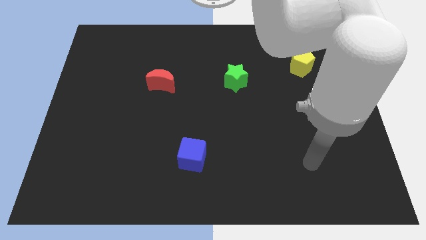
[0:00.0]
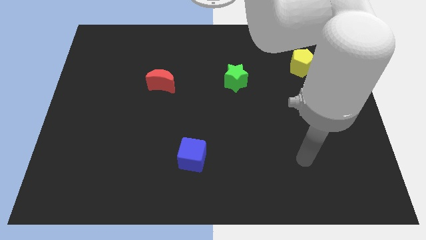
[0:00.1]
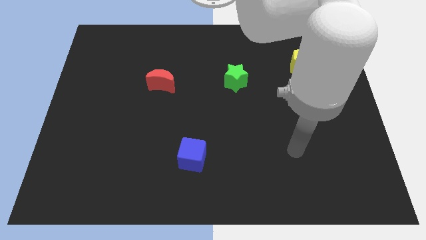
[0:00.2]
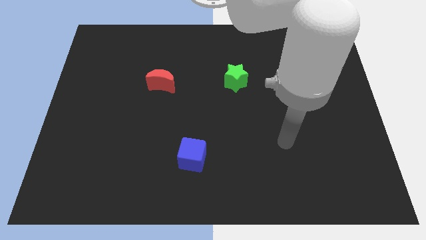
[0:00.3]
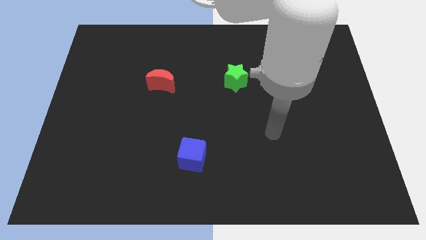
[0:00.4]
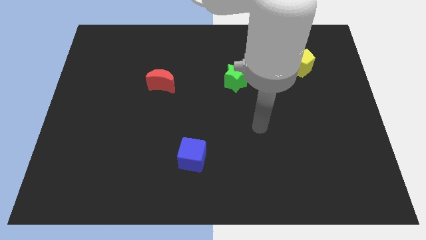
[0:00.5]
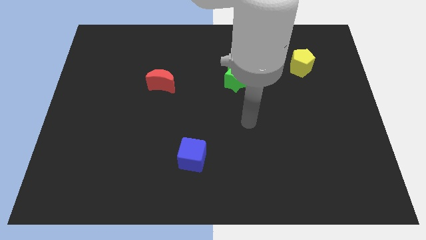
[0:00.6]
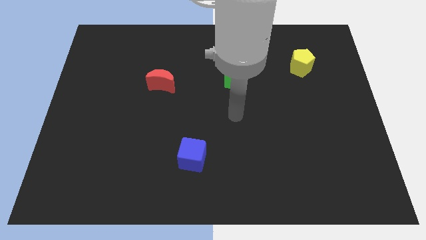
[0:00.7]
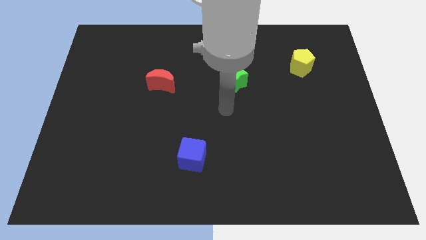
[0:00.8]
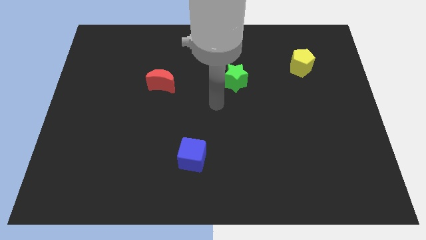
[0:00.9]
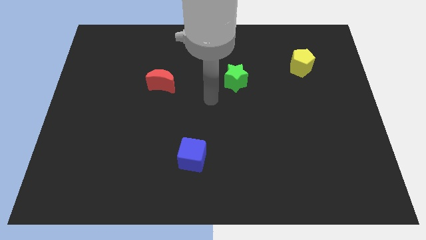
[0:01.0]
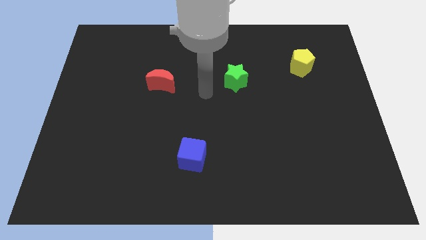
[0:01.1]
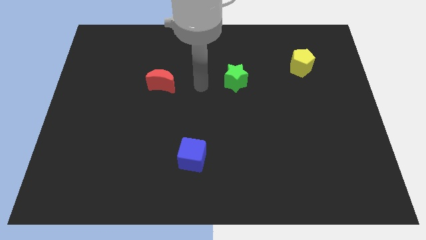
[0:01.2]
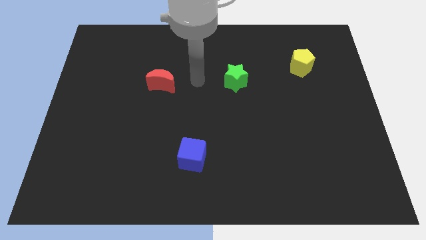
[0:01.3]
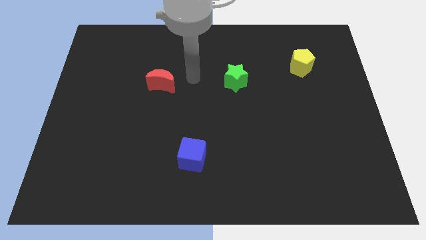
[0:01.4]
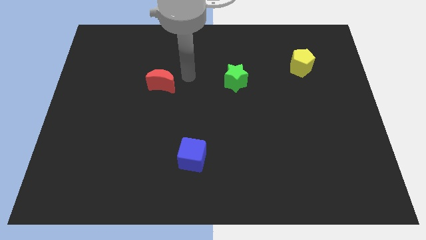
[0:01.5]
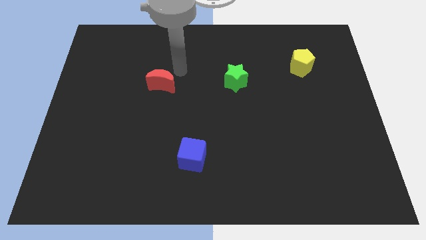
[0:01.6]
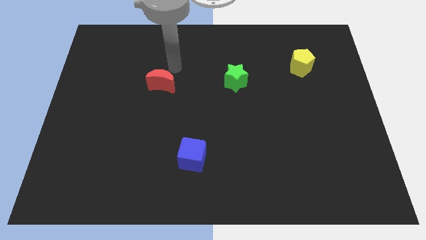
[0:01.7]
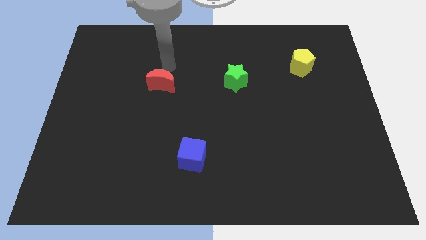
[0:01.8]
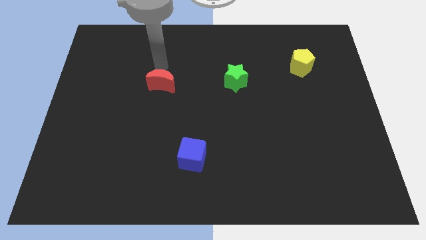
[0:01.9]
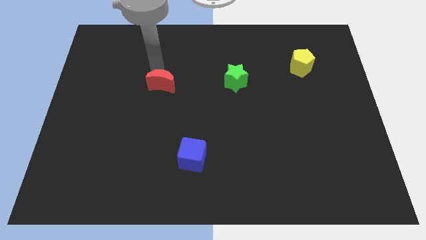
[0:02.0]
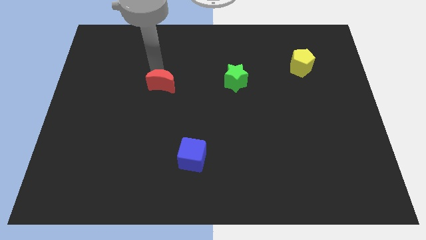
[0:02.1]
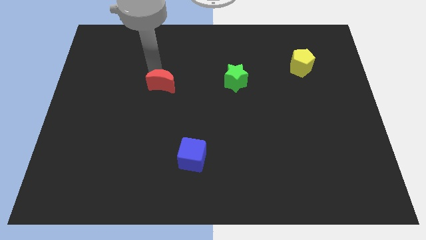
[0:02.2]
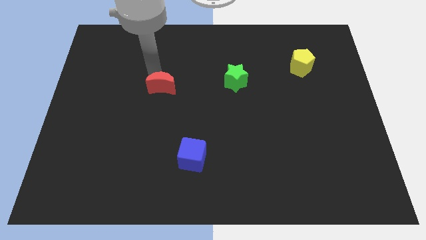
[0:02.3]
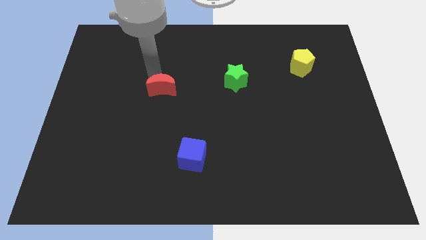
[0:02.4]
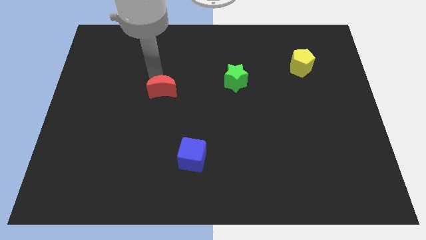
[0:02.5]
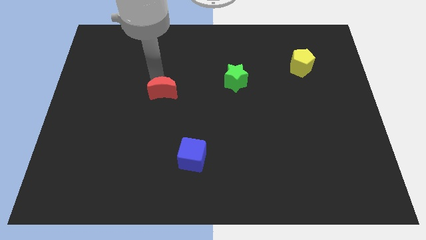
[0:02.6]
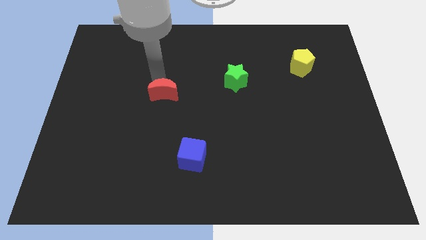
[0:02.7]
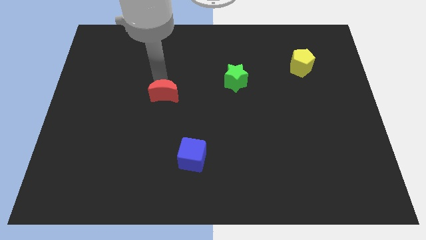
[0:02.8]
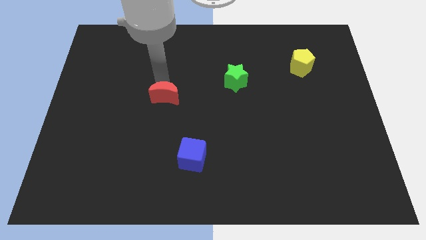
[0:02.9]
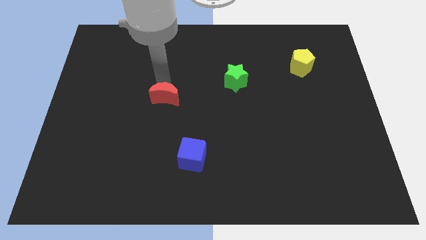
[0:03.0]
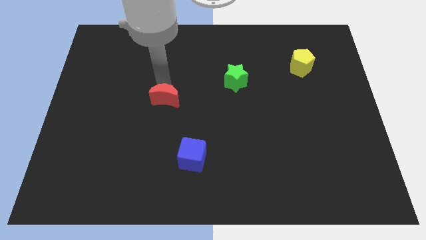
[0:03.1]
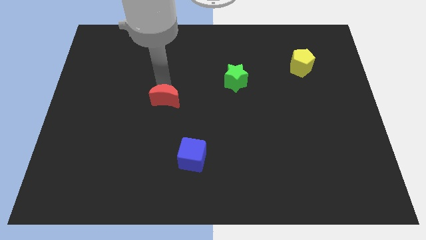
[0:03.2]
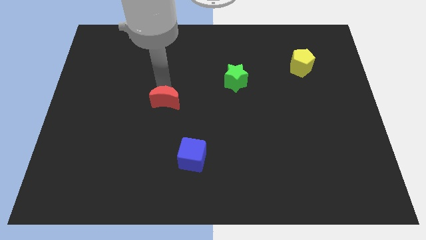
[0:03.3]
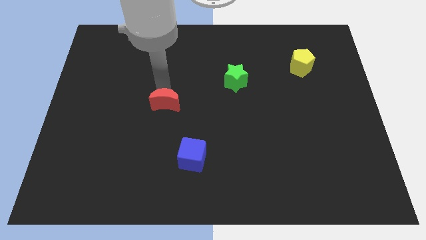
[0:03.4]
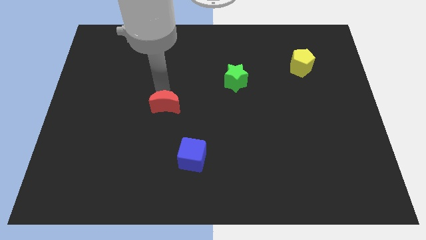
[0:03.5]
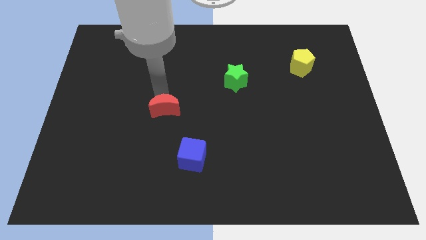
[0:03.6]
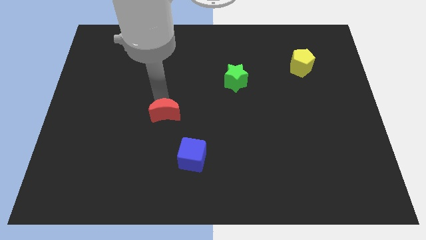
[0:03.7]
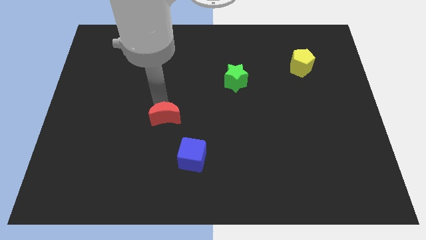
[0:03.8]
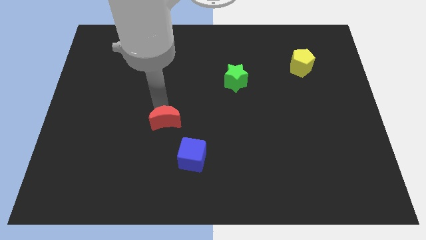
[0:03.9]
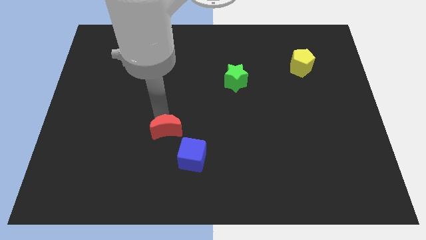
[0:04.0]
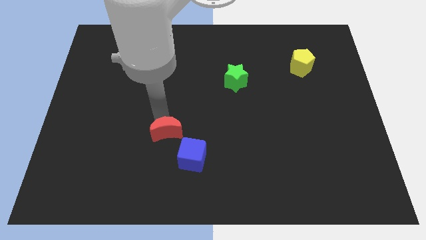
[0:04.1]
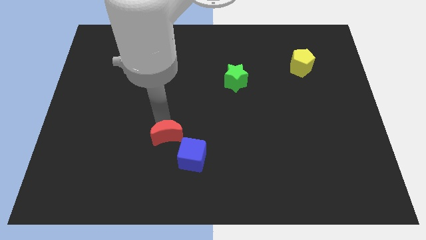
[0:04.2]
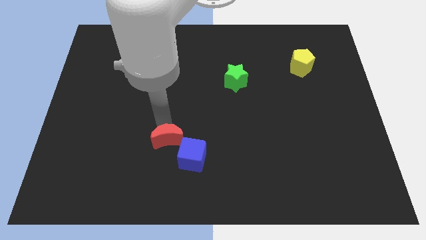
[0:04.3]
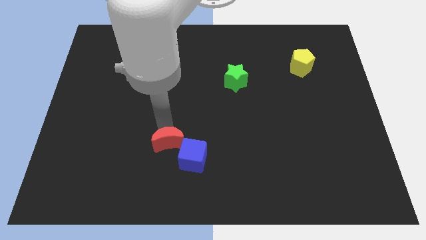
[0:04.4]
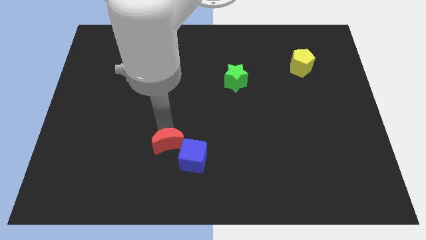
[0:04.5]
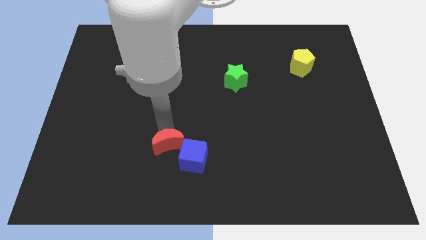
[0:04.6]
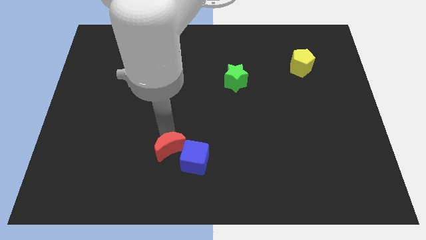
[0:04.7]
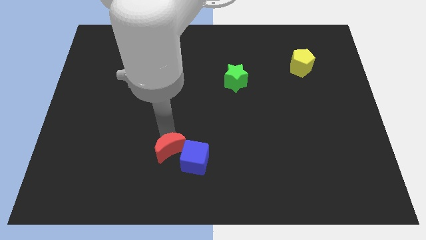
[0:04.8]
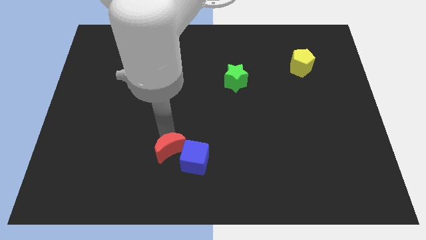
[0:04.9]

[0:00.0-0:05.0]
move the red moon next to the blue block

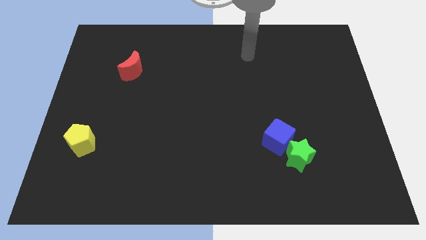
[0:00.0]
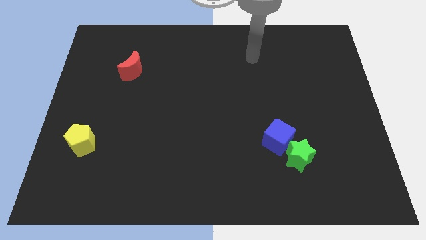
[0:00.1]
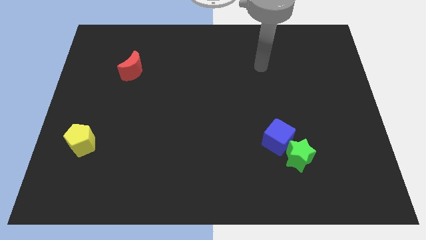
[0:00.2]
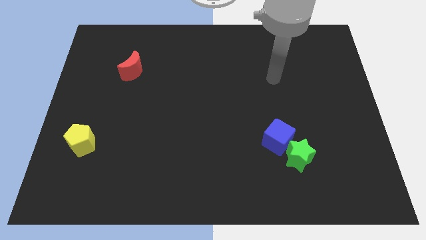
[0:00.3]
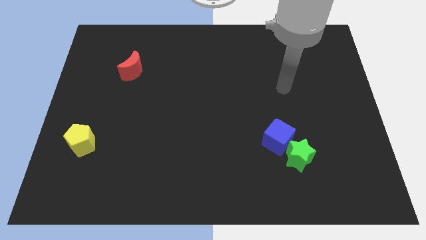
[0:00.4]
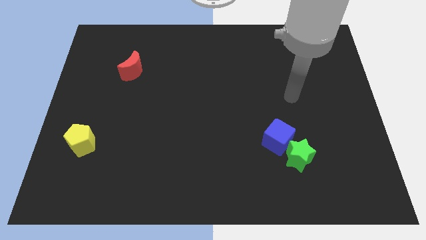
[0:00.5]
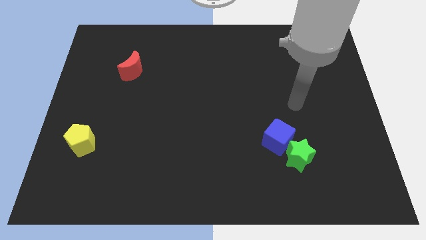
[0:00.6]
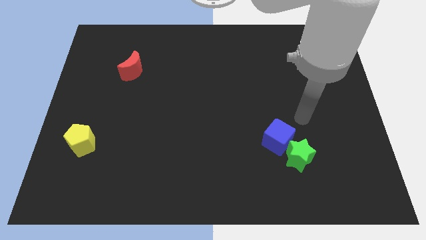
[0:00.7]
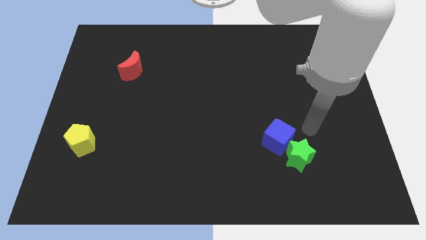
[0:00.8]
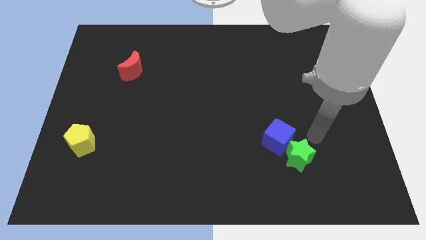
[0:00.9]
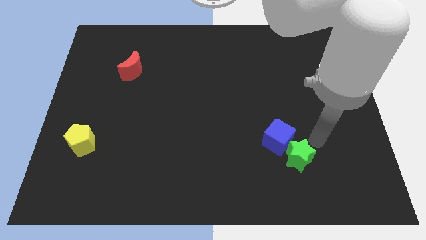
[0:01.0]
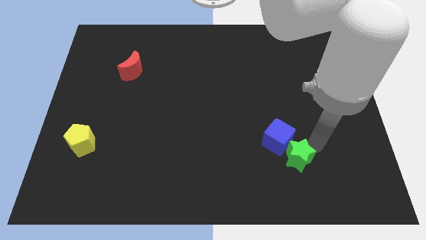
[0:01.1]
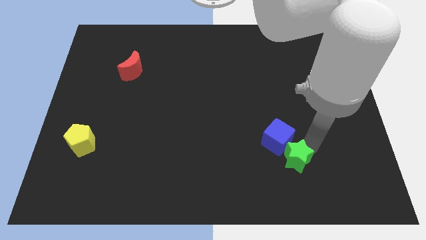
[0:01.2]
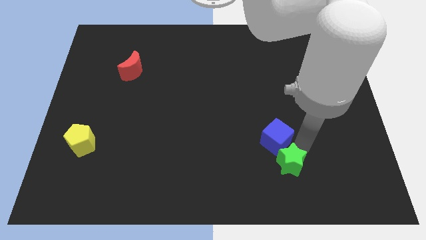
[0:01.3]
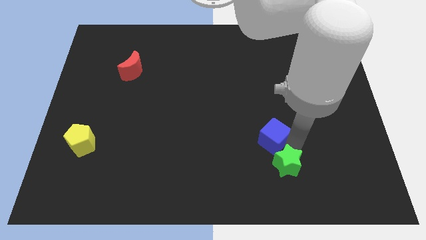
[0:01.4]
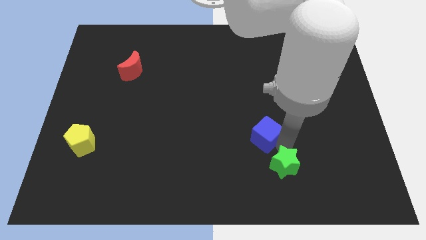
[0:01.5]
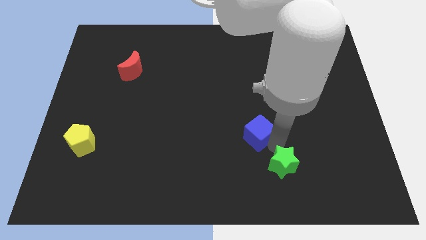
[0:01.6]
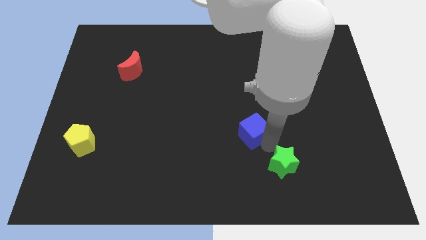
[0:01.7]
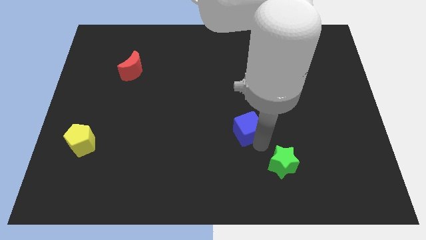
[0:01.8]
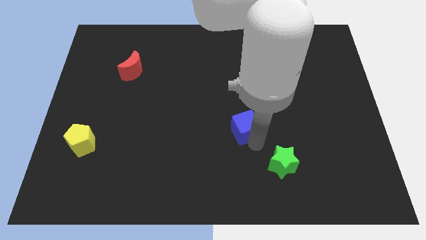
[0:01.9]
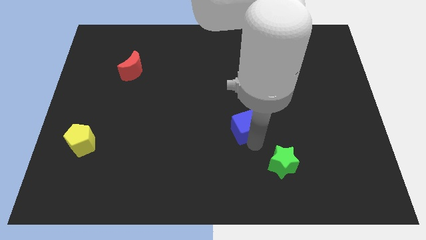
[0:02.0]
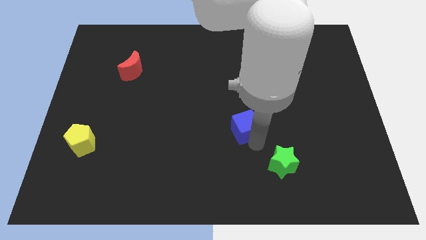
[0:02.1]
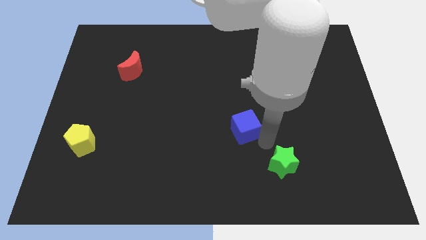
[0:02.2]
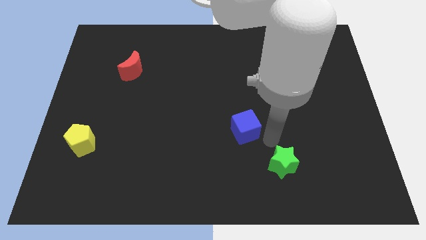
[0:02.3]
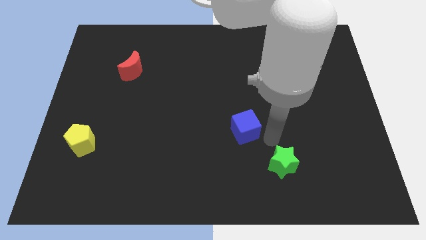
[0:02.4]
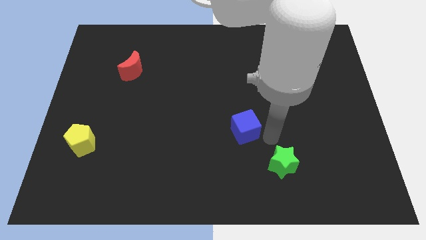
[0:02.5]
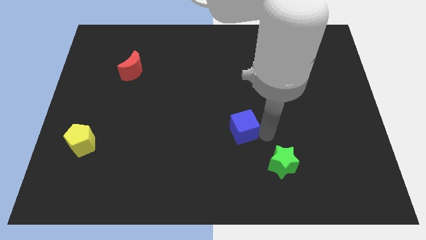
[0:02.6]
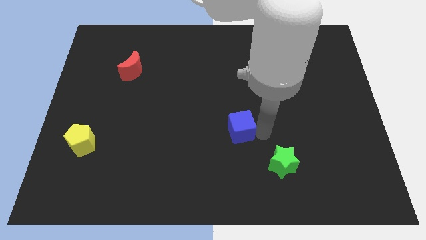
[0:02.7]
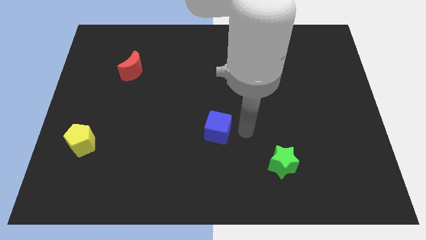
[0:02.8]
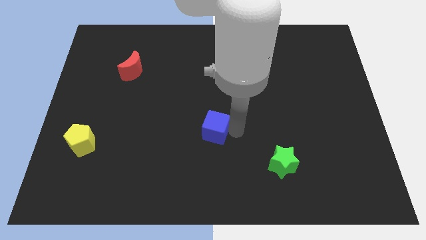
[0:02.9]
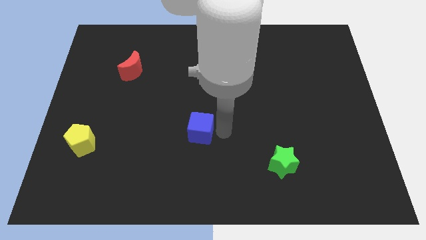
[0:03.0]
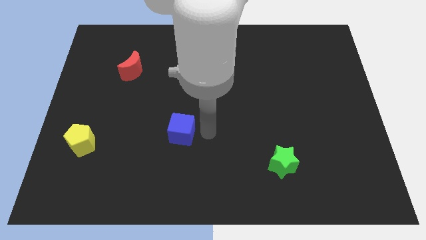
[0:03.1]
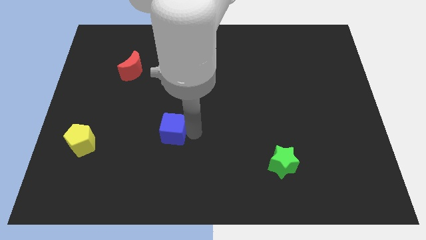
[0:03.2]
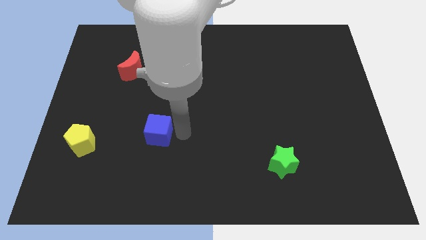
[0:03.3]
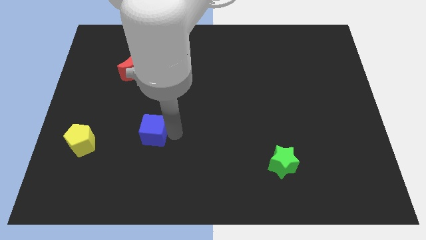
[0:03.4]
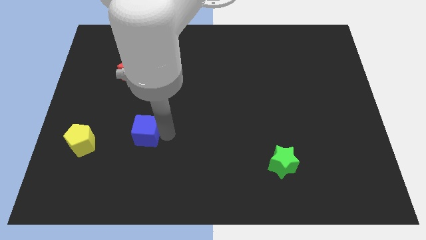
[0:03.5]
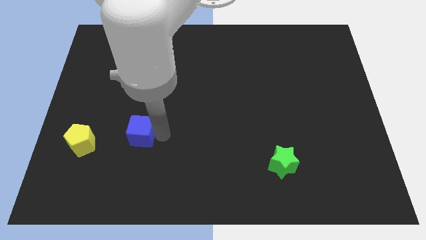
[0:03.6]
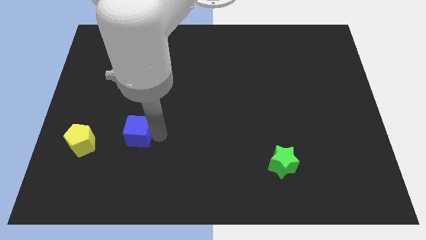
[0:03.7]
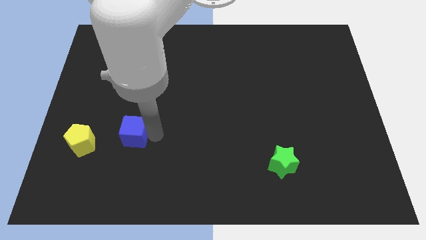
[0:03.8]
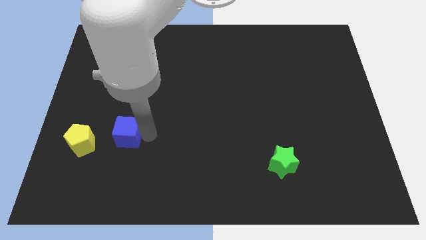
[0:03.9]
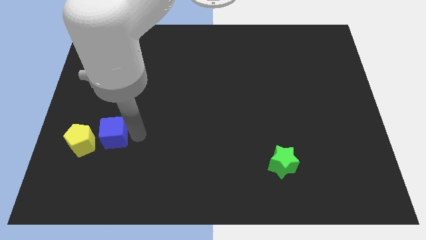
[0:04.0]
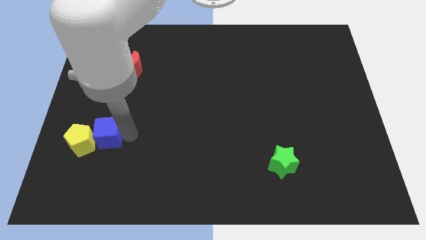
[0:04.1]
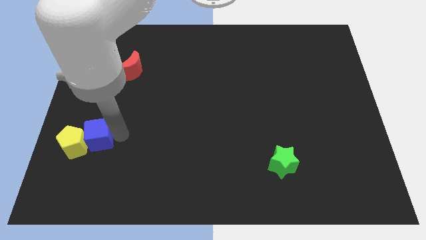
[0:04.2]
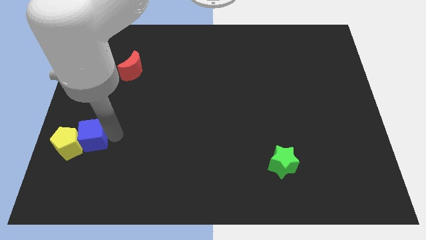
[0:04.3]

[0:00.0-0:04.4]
put the blue block to the pentagon
